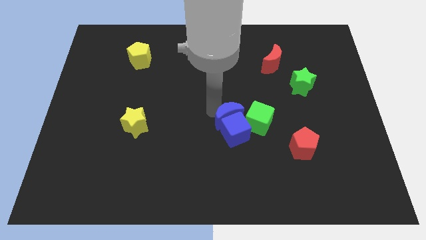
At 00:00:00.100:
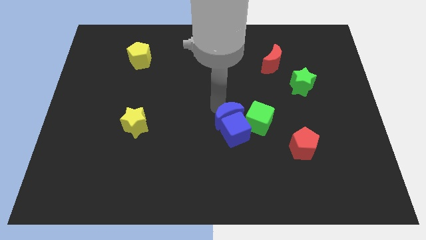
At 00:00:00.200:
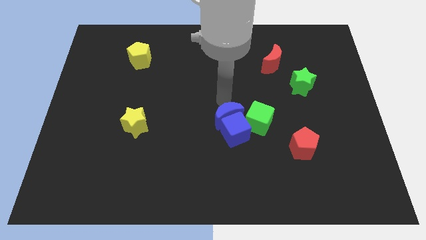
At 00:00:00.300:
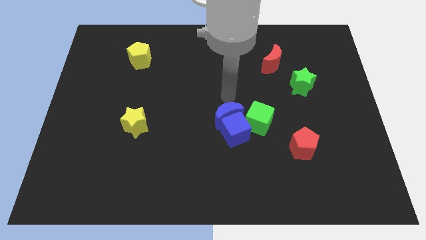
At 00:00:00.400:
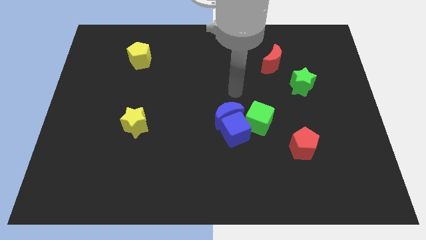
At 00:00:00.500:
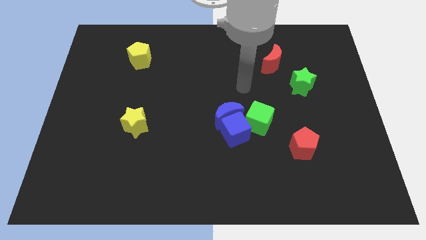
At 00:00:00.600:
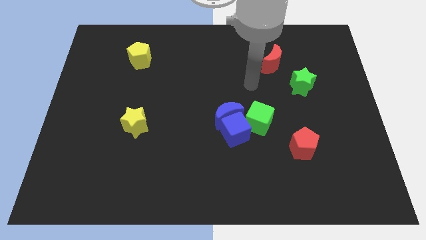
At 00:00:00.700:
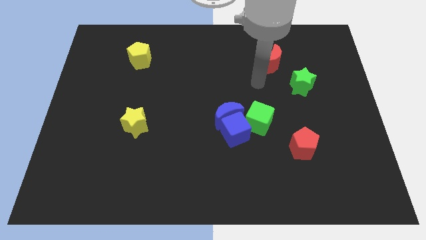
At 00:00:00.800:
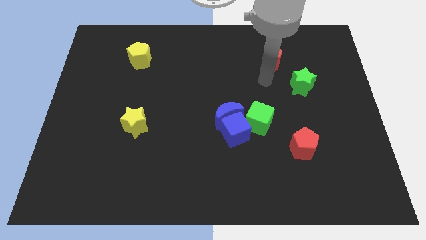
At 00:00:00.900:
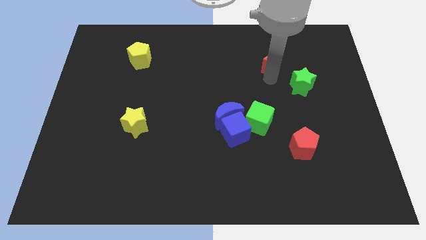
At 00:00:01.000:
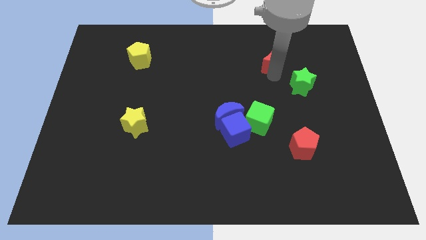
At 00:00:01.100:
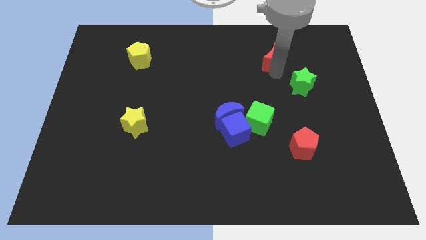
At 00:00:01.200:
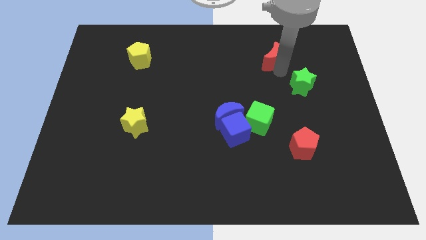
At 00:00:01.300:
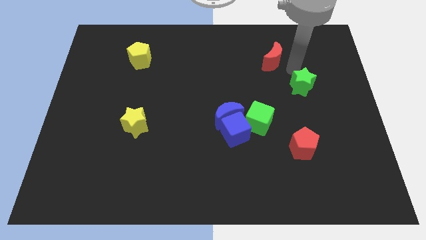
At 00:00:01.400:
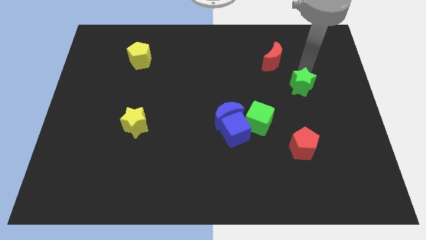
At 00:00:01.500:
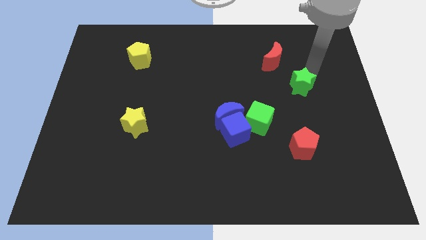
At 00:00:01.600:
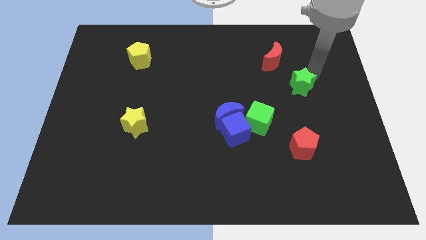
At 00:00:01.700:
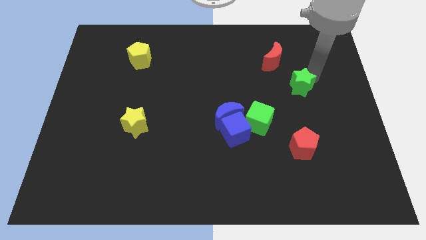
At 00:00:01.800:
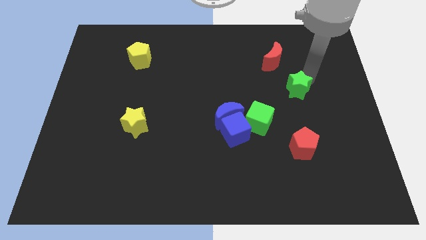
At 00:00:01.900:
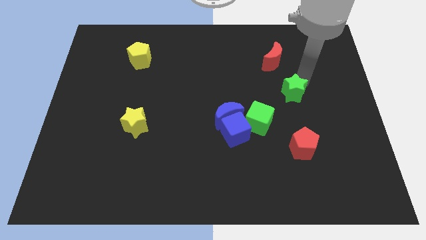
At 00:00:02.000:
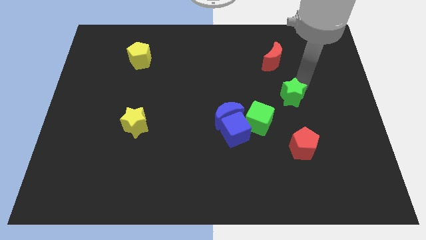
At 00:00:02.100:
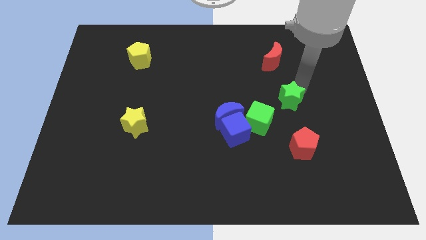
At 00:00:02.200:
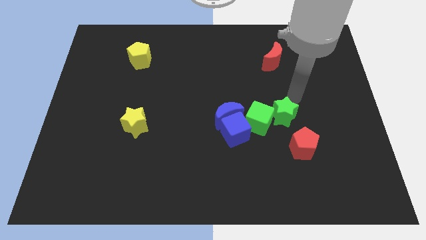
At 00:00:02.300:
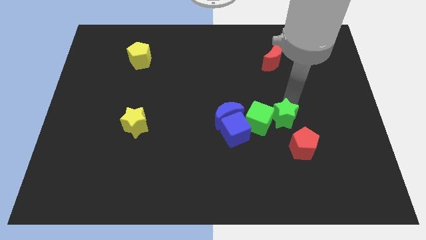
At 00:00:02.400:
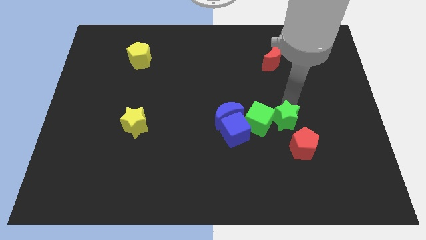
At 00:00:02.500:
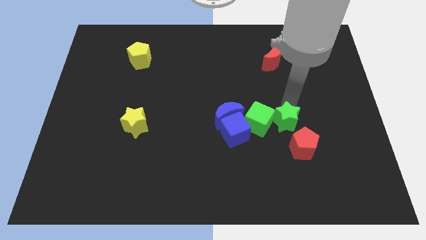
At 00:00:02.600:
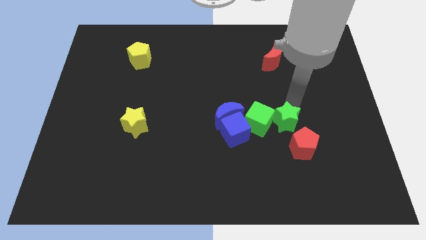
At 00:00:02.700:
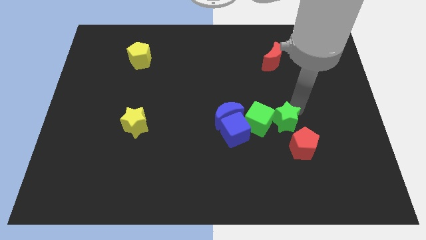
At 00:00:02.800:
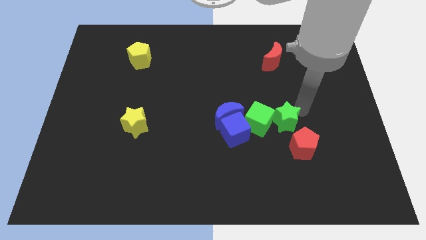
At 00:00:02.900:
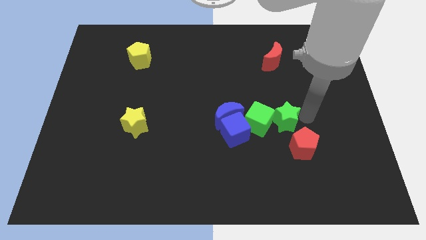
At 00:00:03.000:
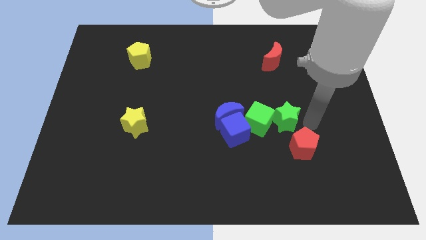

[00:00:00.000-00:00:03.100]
move the green star diagonal to the red pentagon

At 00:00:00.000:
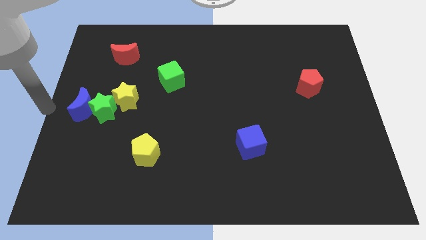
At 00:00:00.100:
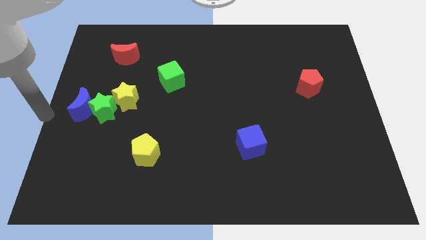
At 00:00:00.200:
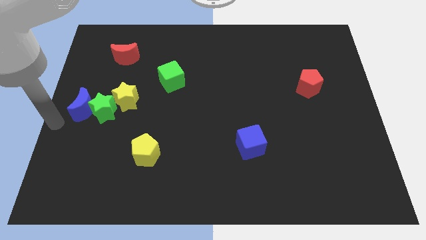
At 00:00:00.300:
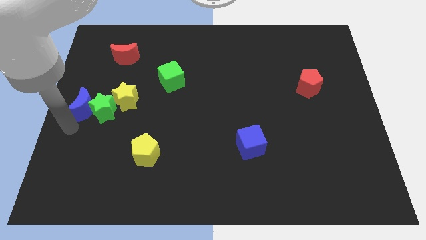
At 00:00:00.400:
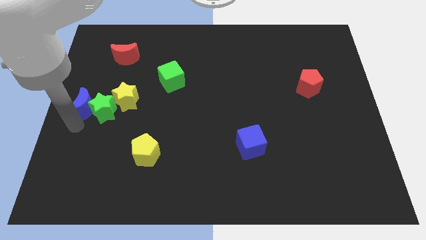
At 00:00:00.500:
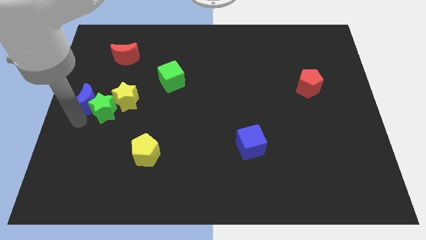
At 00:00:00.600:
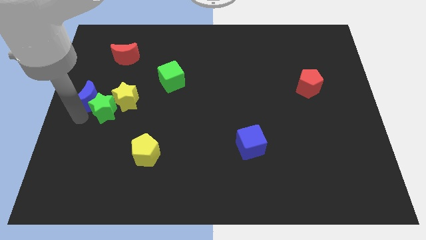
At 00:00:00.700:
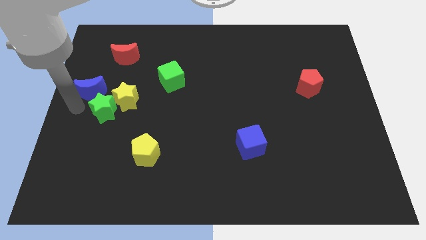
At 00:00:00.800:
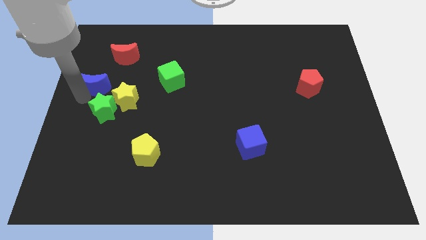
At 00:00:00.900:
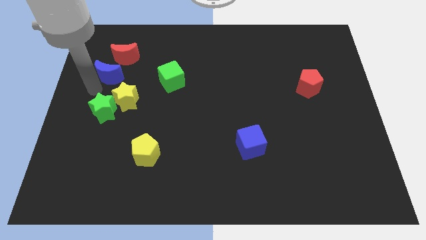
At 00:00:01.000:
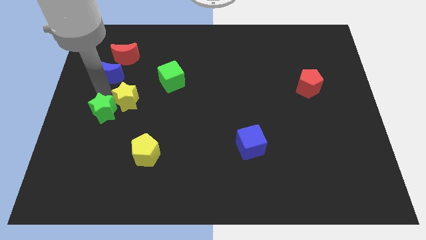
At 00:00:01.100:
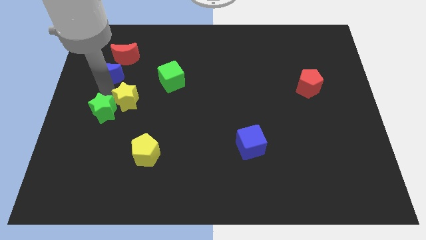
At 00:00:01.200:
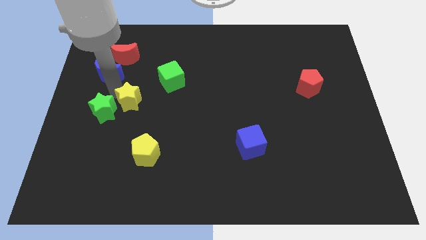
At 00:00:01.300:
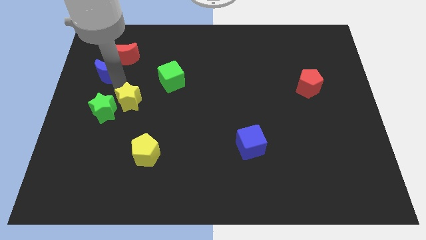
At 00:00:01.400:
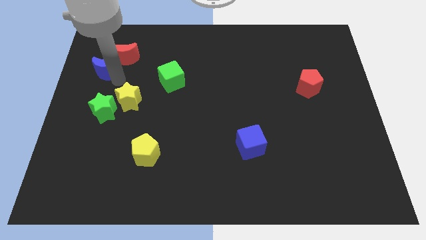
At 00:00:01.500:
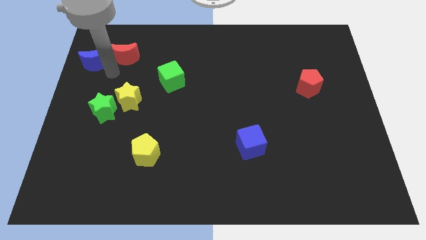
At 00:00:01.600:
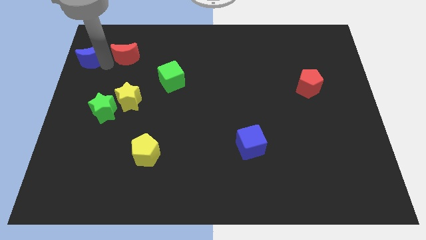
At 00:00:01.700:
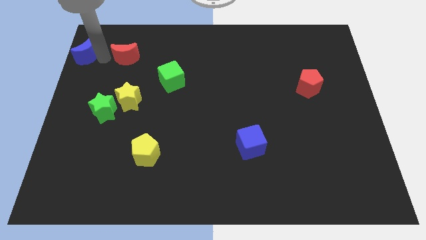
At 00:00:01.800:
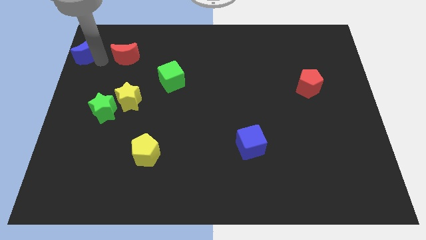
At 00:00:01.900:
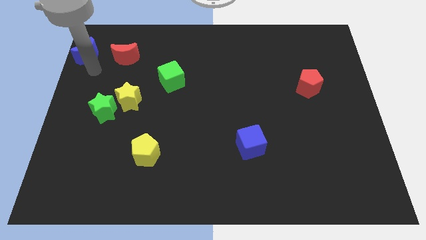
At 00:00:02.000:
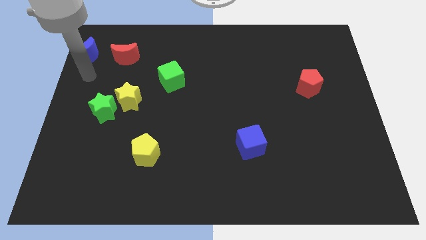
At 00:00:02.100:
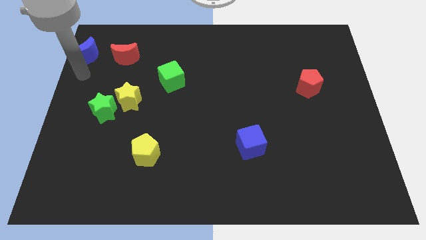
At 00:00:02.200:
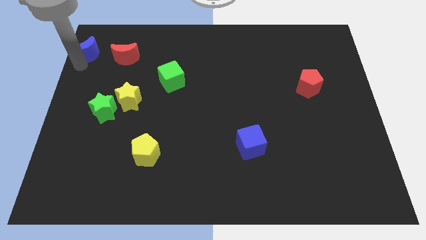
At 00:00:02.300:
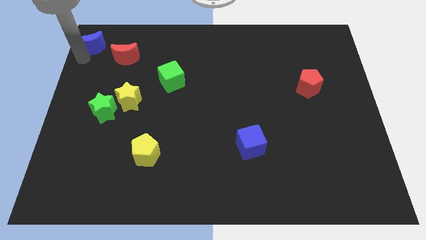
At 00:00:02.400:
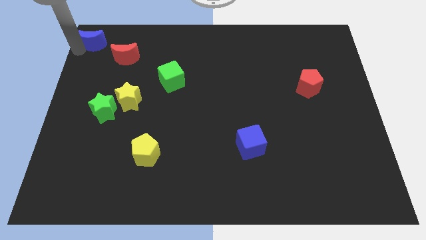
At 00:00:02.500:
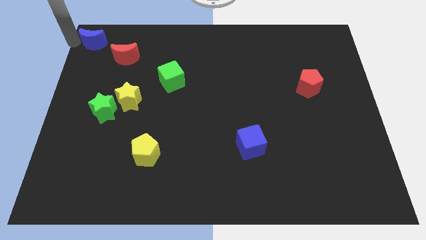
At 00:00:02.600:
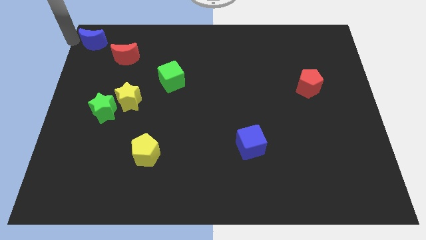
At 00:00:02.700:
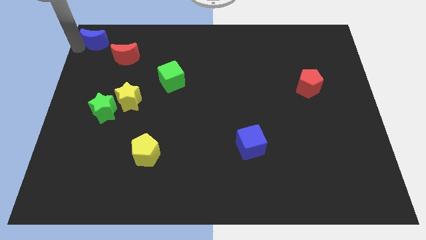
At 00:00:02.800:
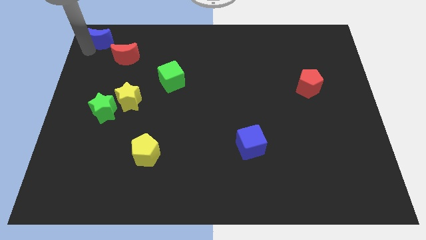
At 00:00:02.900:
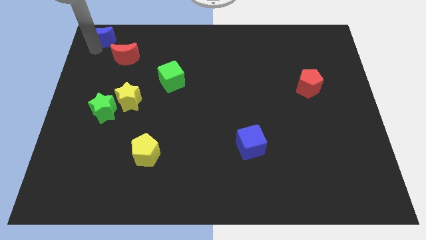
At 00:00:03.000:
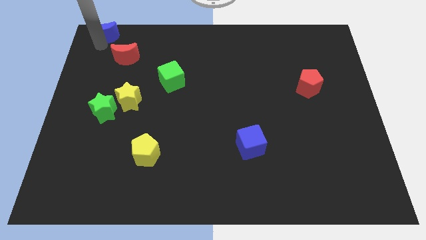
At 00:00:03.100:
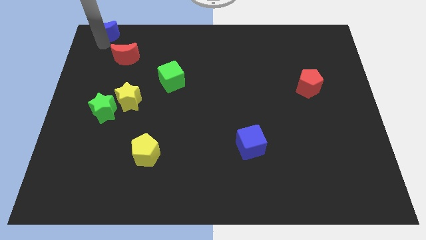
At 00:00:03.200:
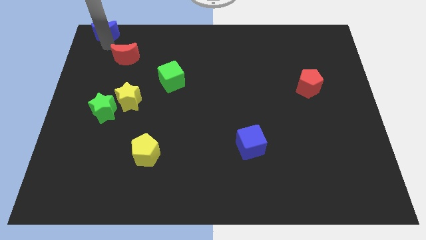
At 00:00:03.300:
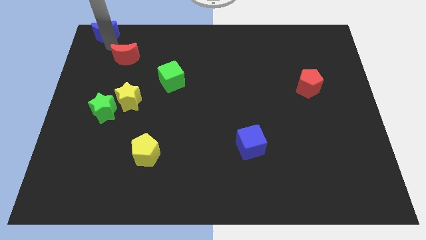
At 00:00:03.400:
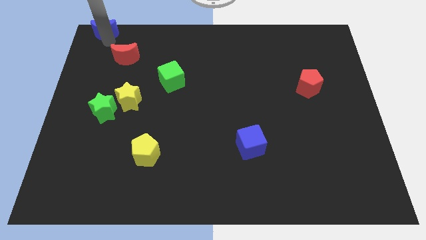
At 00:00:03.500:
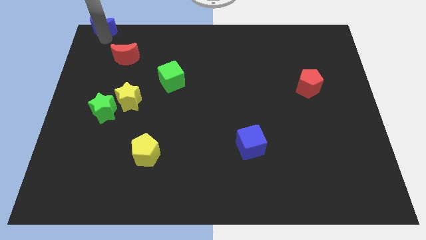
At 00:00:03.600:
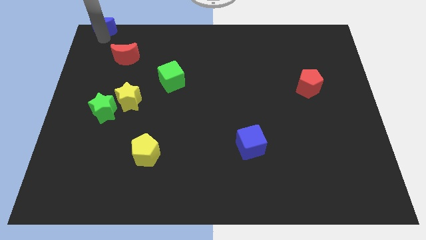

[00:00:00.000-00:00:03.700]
drag the blue moon to the top left

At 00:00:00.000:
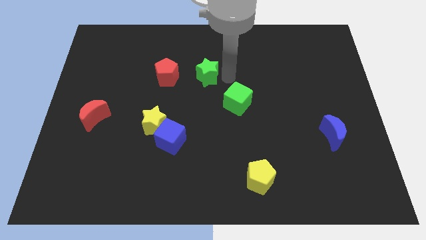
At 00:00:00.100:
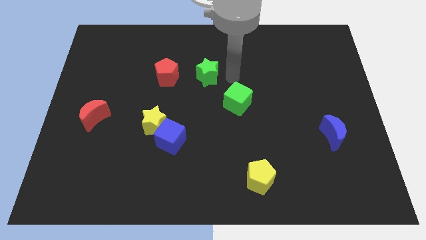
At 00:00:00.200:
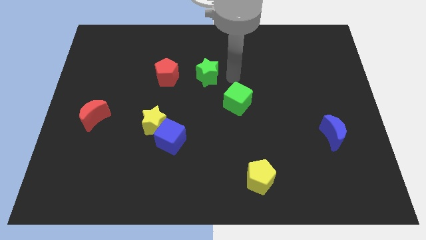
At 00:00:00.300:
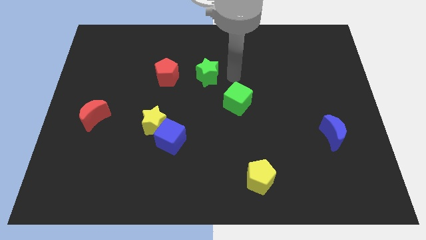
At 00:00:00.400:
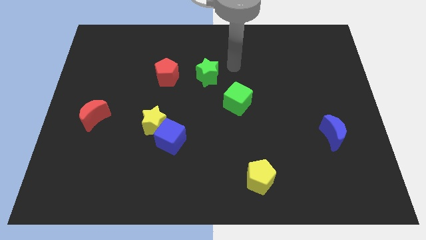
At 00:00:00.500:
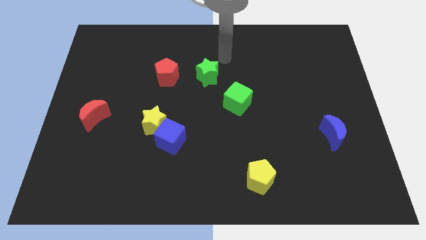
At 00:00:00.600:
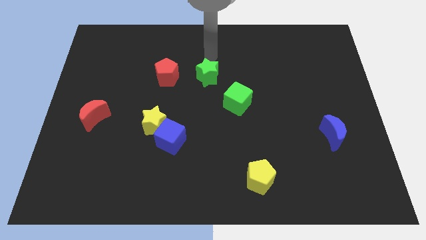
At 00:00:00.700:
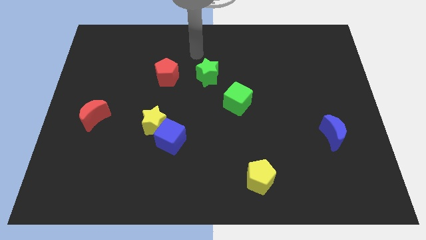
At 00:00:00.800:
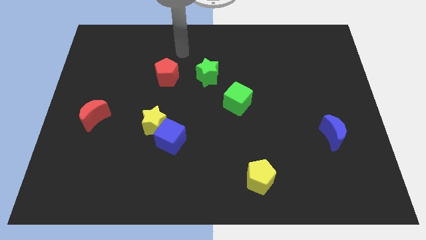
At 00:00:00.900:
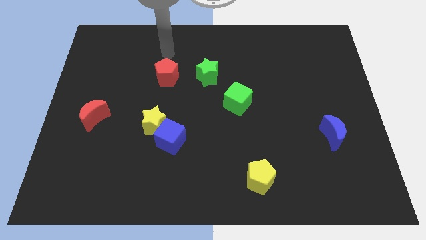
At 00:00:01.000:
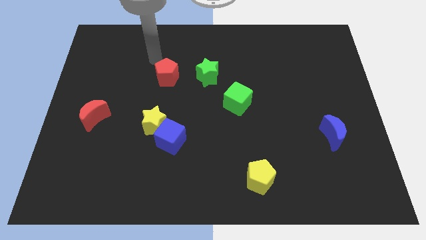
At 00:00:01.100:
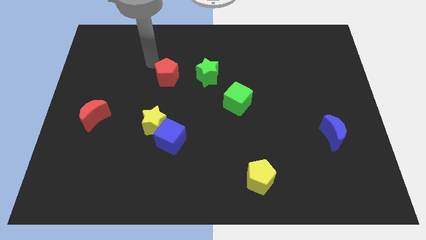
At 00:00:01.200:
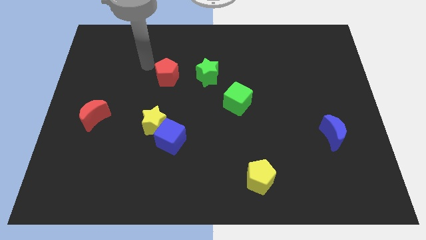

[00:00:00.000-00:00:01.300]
move your arm towards the red pentagon

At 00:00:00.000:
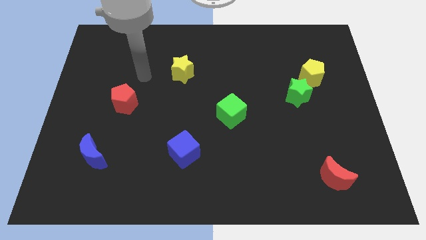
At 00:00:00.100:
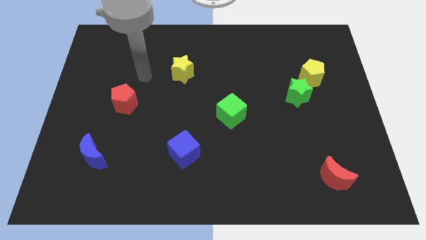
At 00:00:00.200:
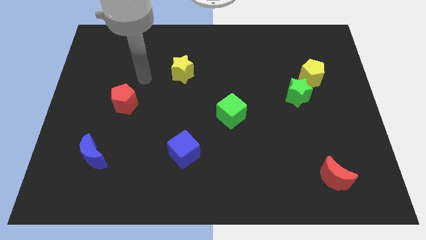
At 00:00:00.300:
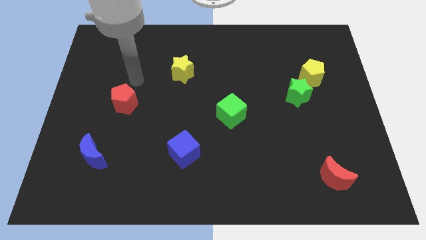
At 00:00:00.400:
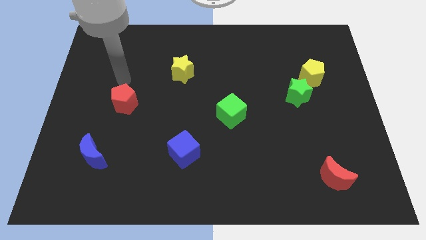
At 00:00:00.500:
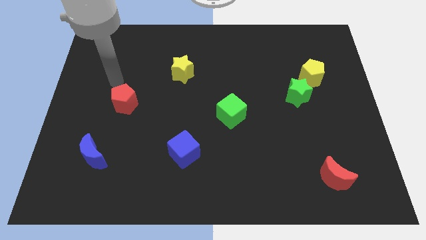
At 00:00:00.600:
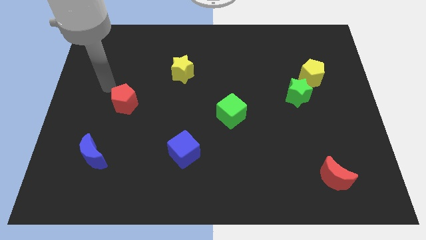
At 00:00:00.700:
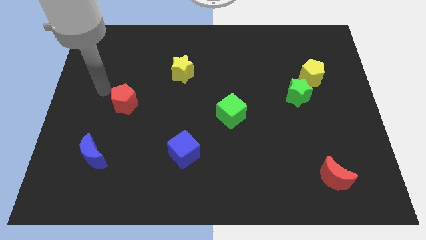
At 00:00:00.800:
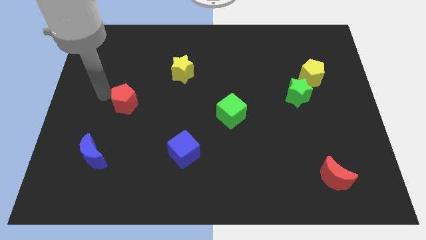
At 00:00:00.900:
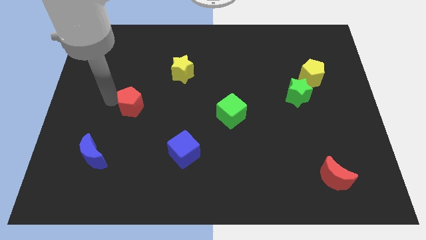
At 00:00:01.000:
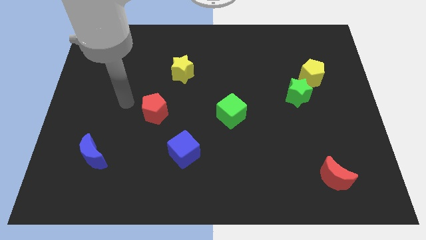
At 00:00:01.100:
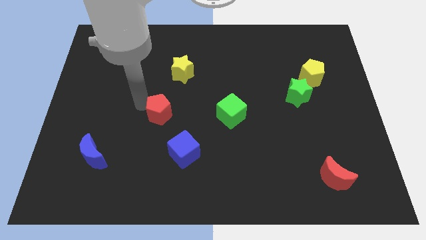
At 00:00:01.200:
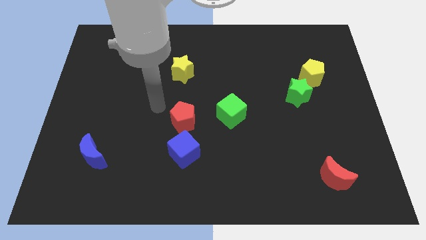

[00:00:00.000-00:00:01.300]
slide red pentagon towards the center of the board
